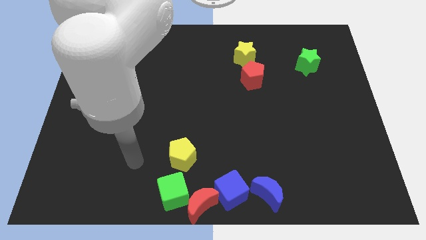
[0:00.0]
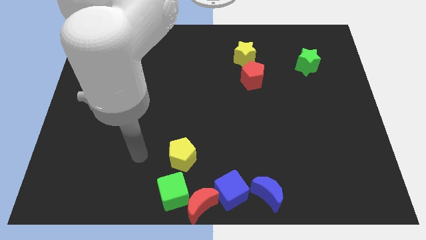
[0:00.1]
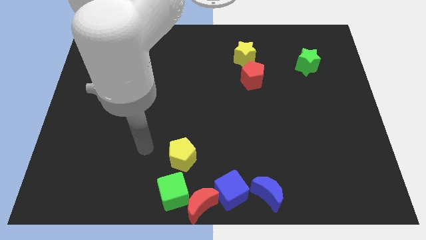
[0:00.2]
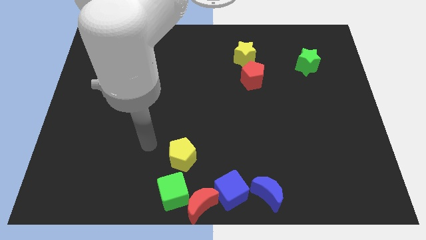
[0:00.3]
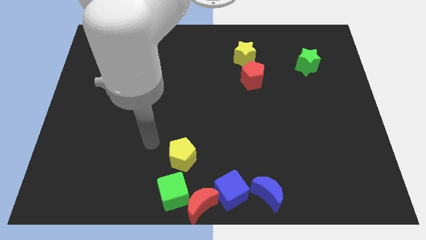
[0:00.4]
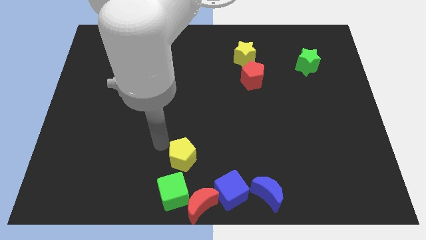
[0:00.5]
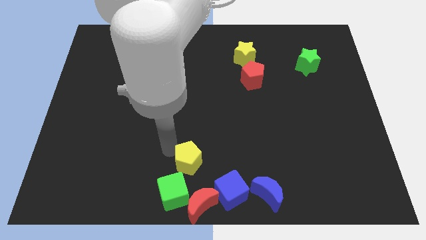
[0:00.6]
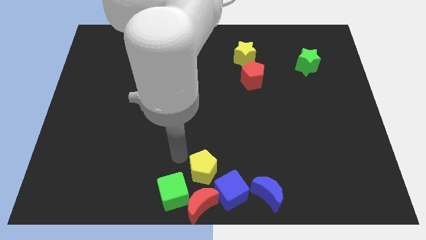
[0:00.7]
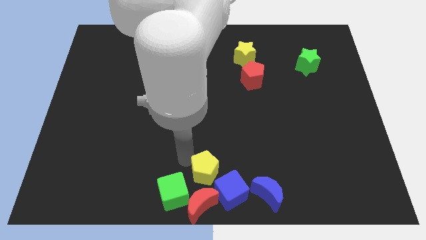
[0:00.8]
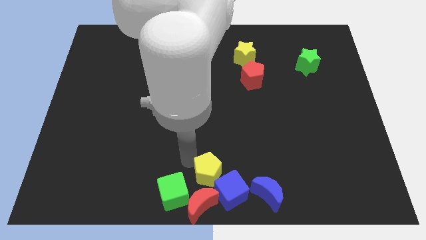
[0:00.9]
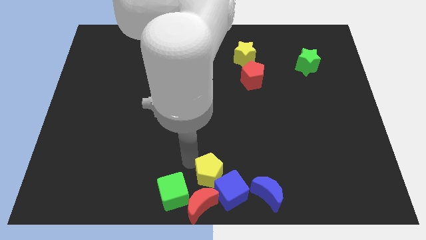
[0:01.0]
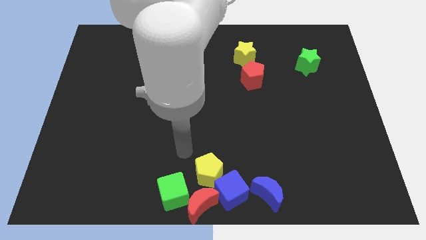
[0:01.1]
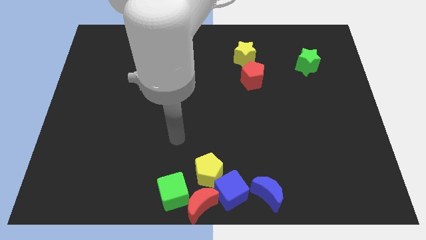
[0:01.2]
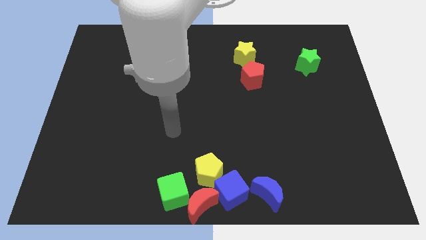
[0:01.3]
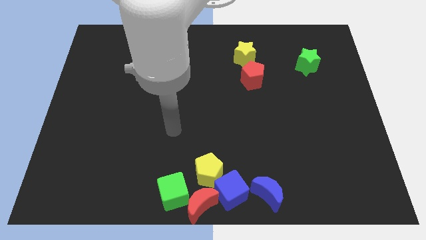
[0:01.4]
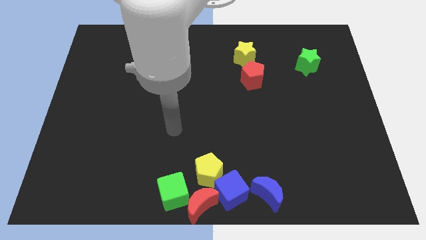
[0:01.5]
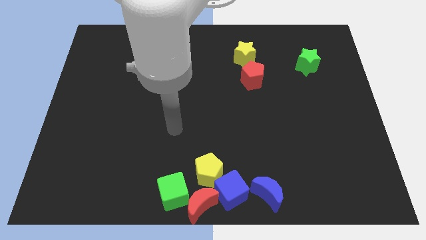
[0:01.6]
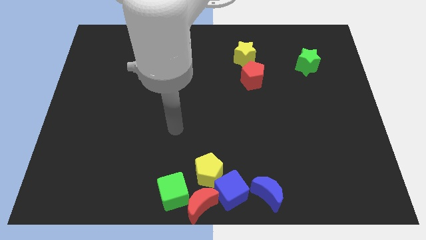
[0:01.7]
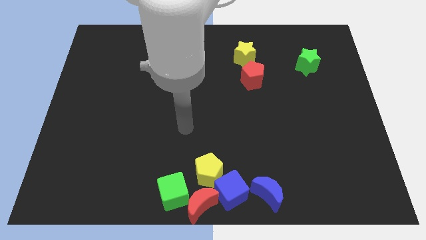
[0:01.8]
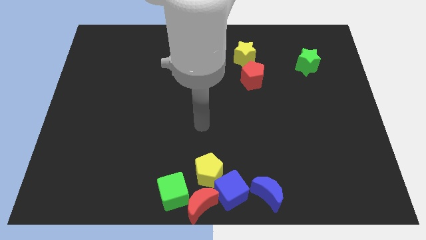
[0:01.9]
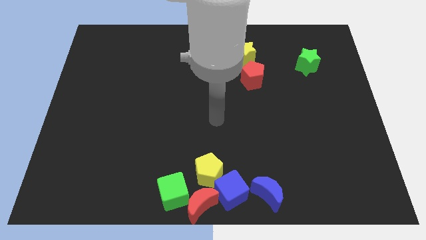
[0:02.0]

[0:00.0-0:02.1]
place the yellow pentagon on top of red crescent

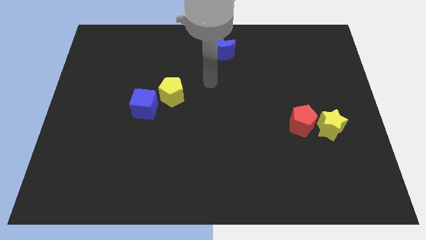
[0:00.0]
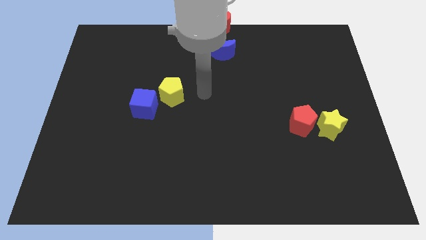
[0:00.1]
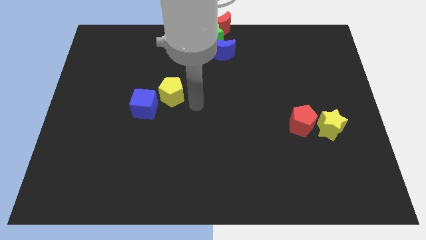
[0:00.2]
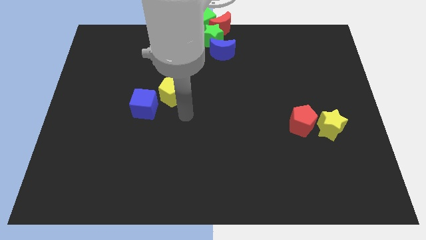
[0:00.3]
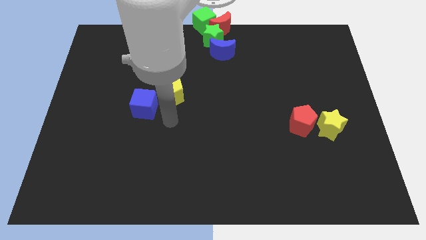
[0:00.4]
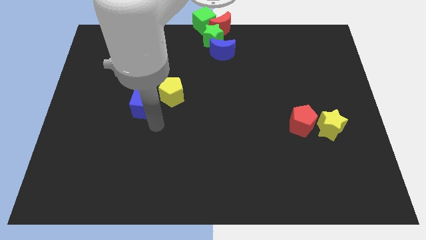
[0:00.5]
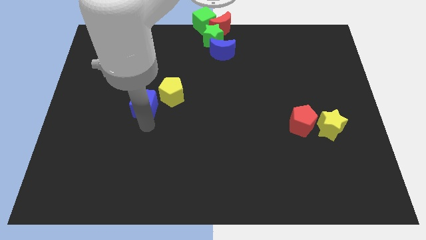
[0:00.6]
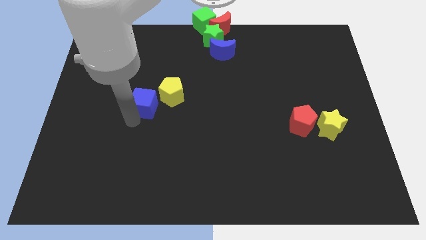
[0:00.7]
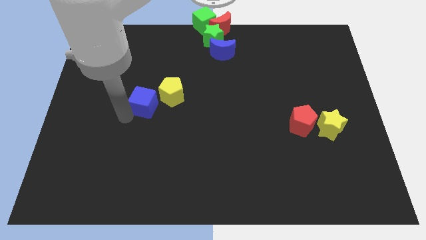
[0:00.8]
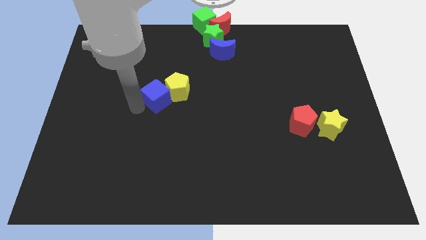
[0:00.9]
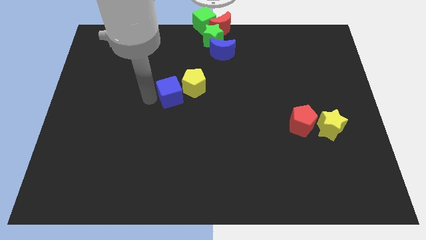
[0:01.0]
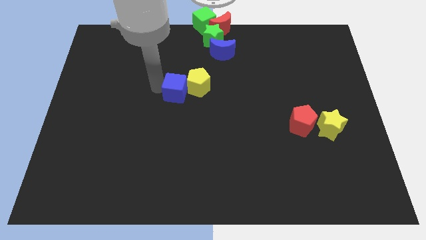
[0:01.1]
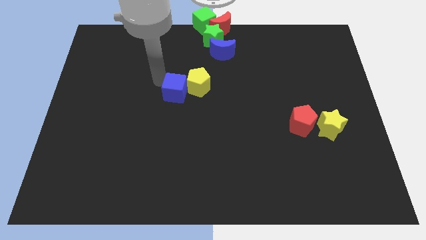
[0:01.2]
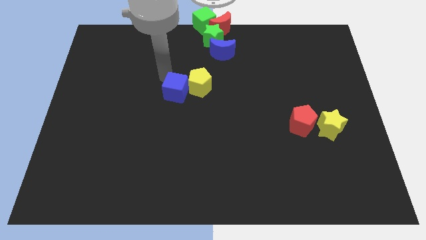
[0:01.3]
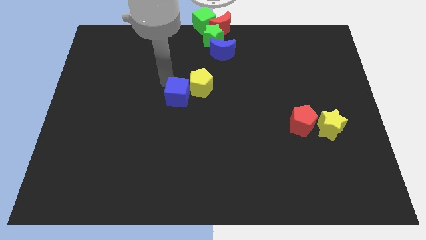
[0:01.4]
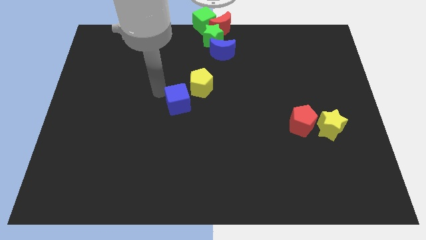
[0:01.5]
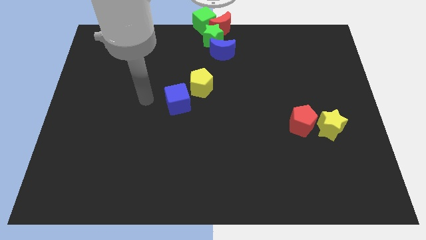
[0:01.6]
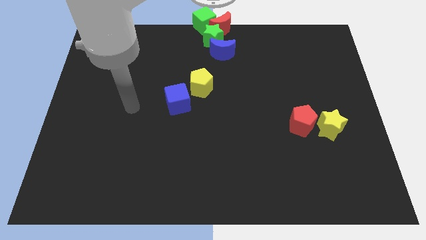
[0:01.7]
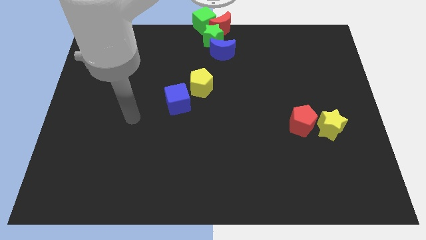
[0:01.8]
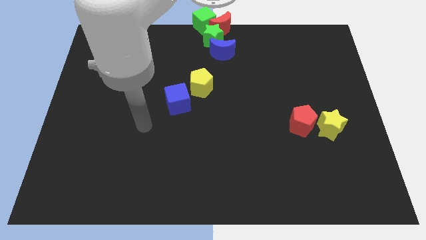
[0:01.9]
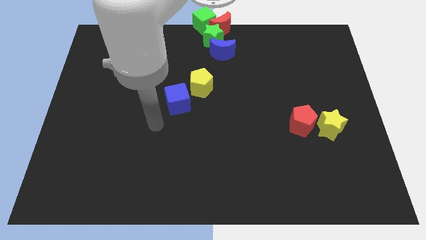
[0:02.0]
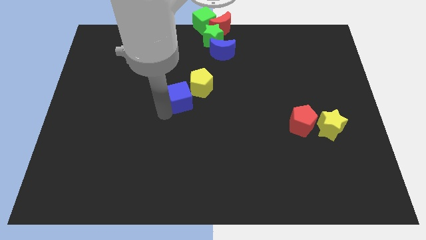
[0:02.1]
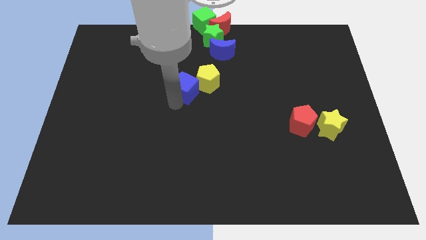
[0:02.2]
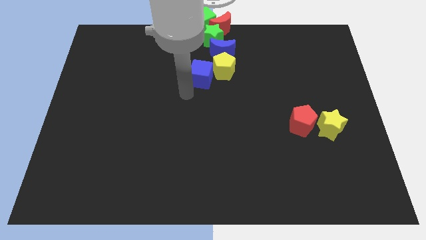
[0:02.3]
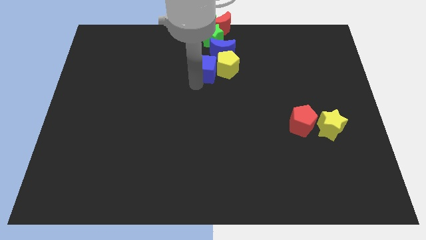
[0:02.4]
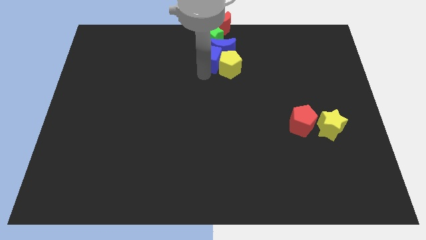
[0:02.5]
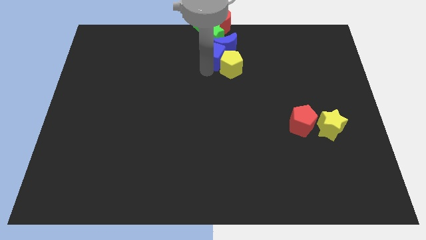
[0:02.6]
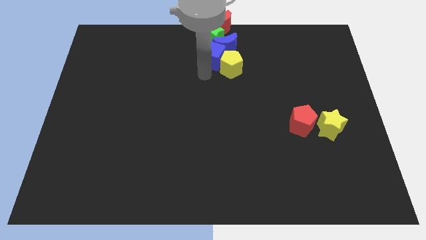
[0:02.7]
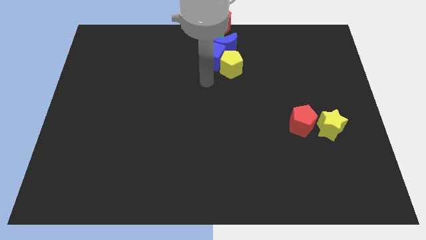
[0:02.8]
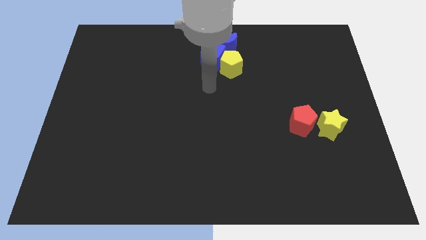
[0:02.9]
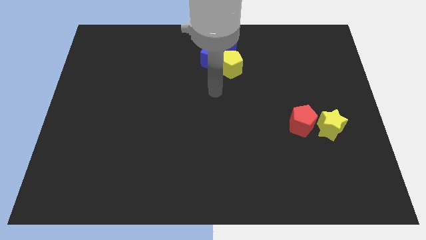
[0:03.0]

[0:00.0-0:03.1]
place the yellow pentagon at the bottom of the blue crescent using the blue cube

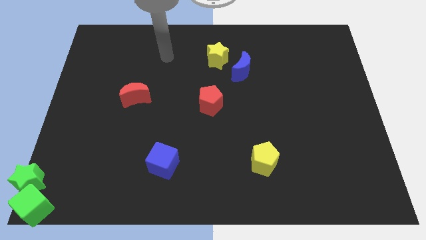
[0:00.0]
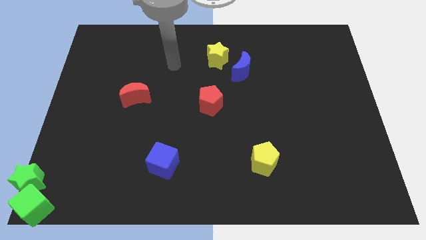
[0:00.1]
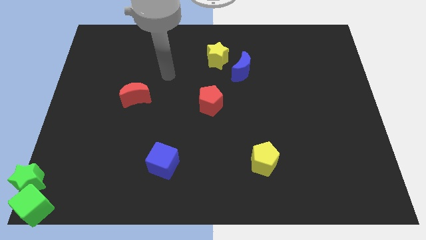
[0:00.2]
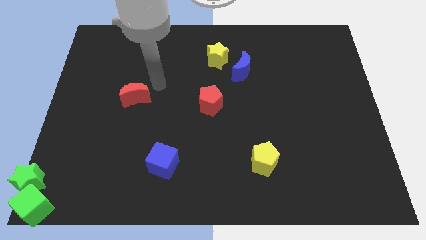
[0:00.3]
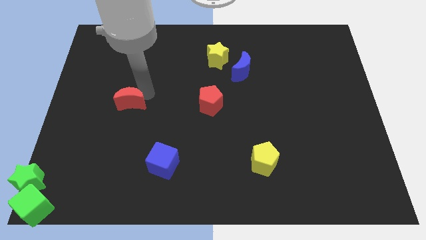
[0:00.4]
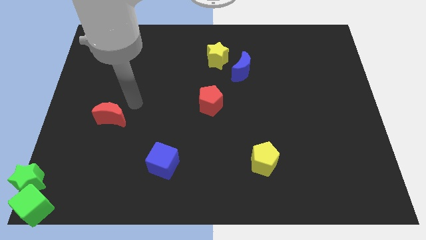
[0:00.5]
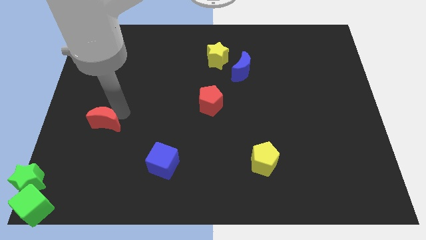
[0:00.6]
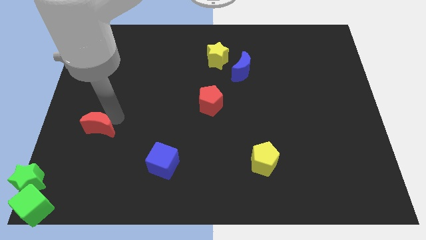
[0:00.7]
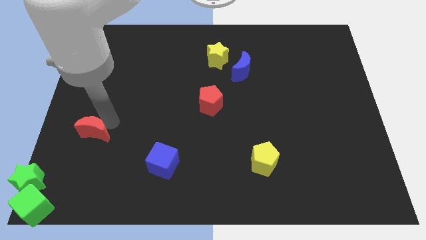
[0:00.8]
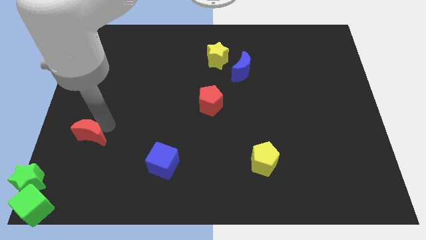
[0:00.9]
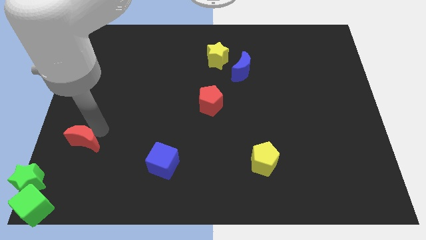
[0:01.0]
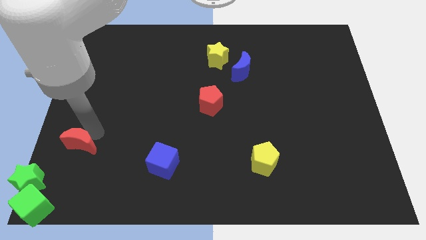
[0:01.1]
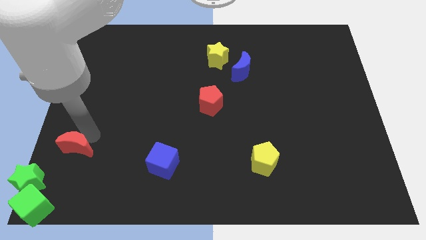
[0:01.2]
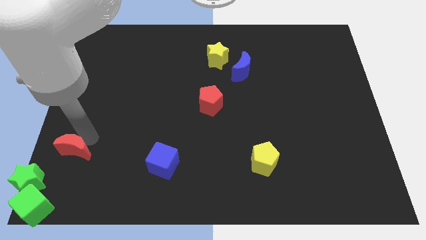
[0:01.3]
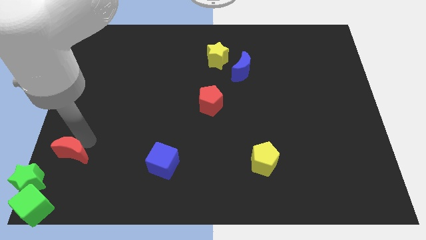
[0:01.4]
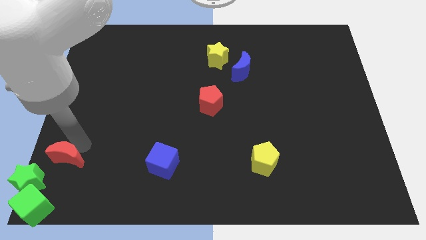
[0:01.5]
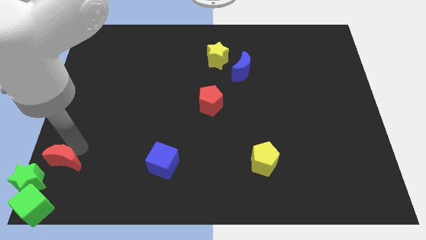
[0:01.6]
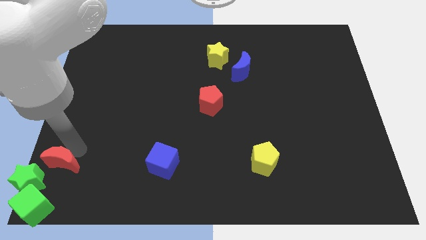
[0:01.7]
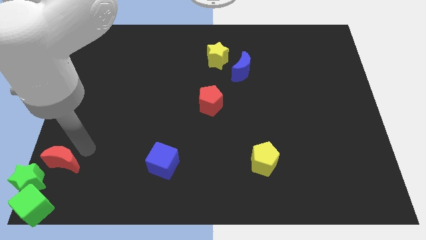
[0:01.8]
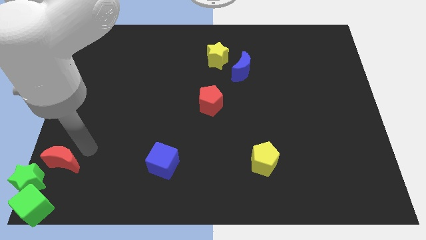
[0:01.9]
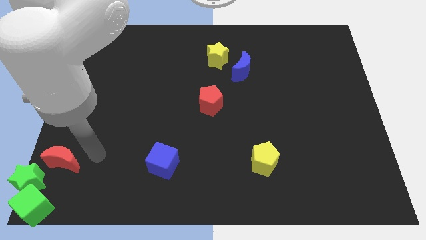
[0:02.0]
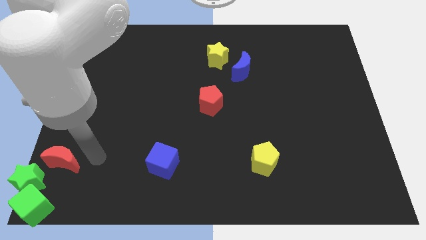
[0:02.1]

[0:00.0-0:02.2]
move red crescent towards the green star

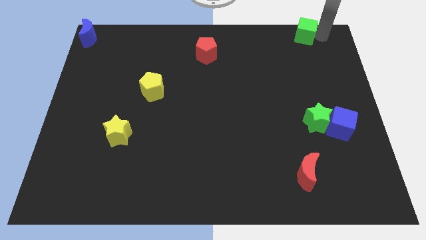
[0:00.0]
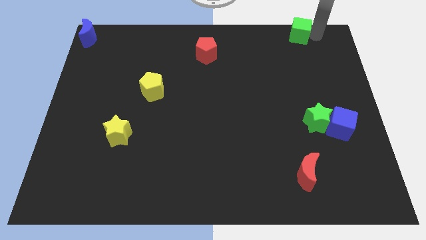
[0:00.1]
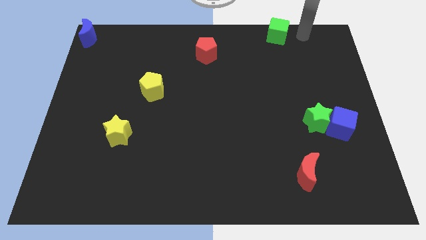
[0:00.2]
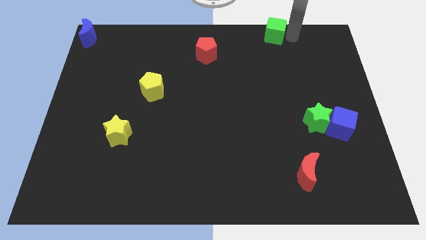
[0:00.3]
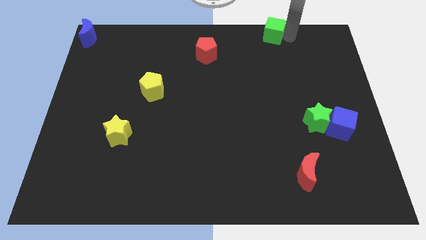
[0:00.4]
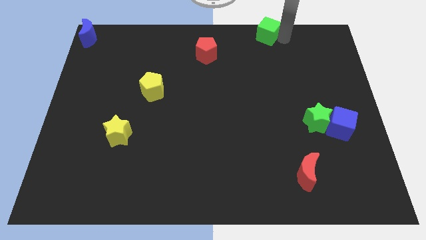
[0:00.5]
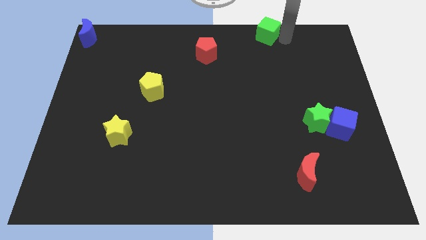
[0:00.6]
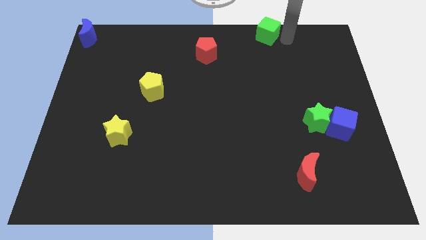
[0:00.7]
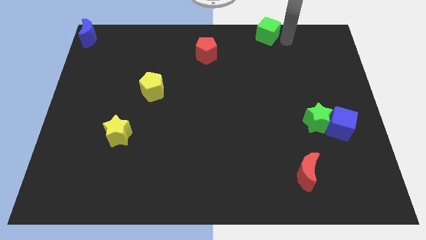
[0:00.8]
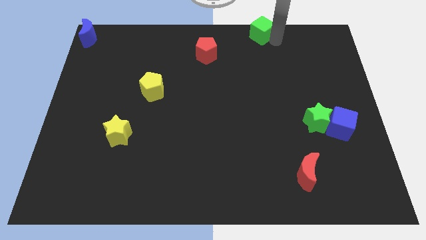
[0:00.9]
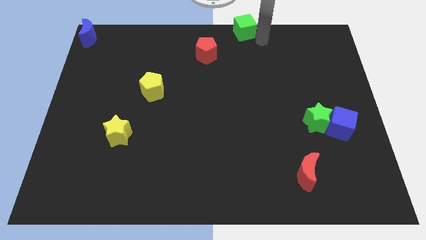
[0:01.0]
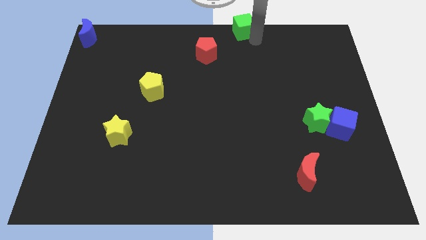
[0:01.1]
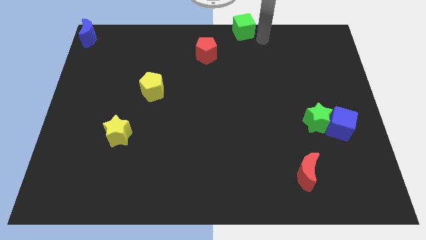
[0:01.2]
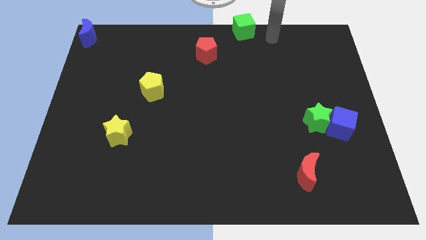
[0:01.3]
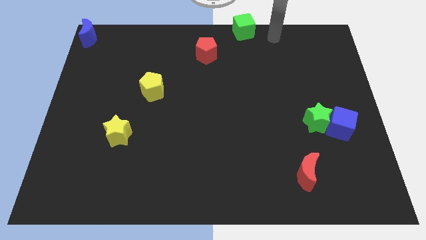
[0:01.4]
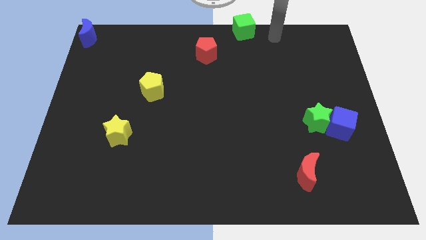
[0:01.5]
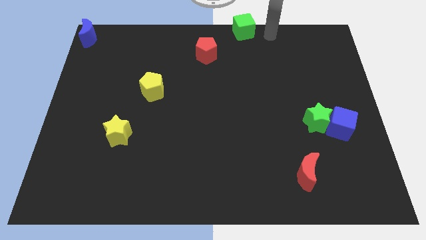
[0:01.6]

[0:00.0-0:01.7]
push the green cube left of the board
